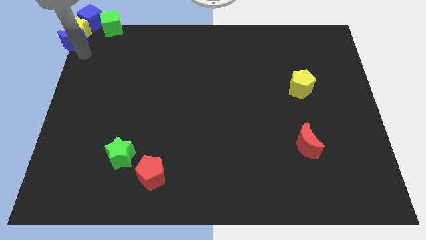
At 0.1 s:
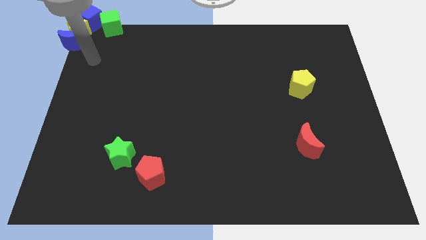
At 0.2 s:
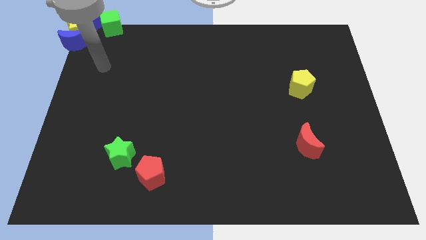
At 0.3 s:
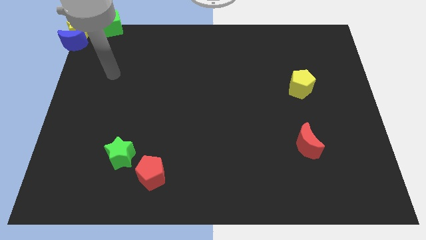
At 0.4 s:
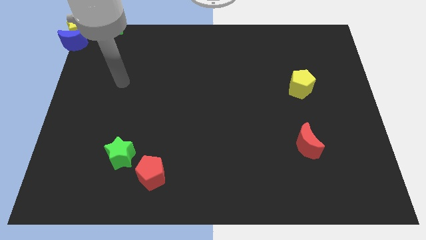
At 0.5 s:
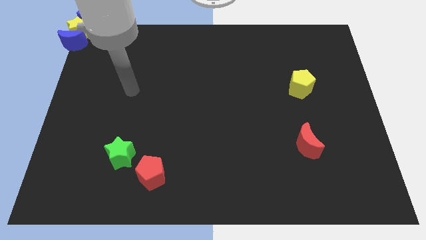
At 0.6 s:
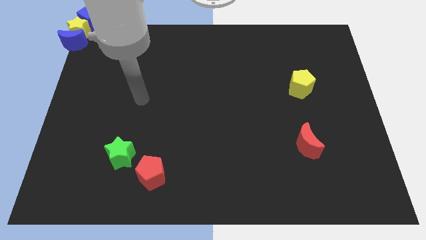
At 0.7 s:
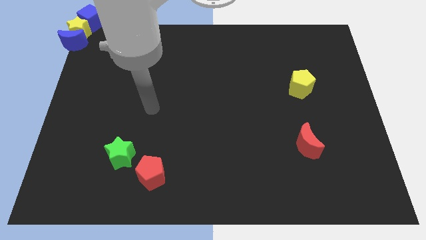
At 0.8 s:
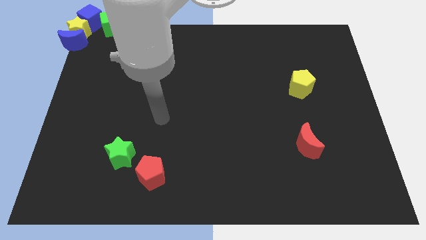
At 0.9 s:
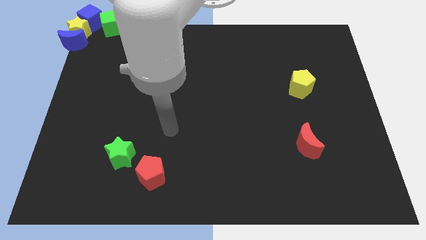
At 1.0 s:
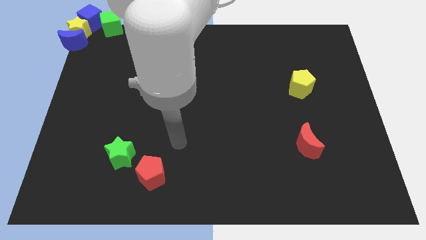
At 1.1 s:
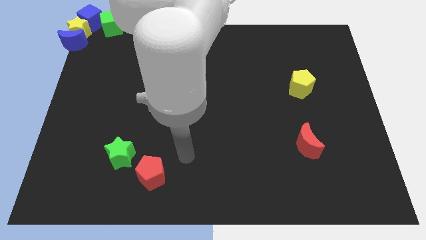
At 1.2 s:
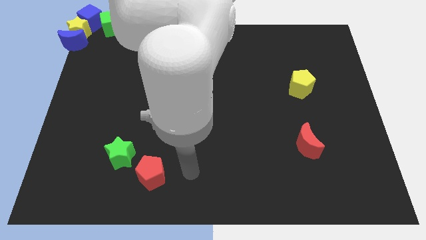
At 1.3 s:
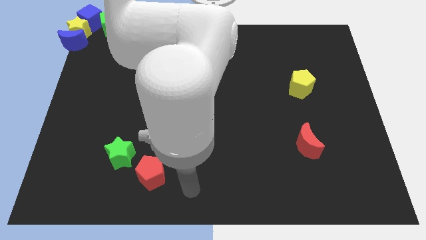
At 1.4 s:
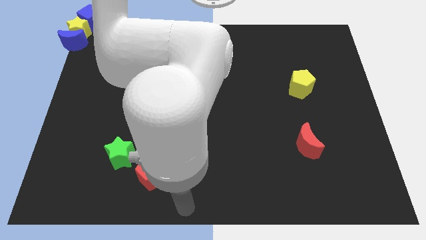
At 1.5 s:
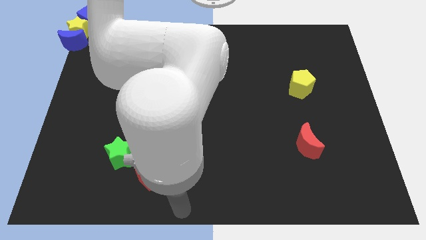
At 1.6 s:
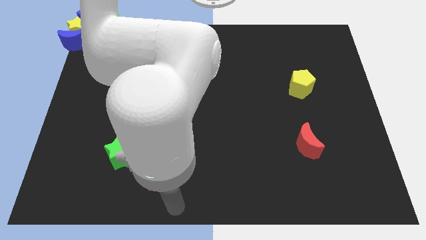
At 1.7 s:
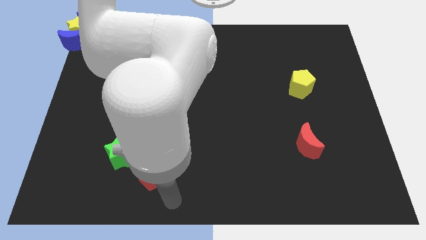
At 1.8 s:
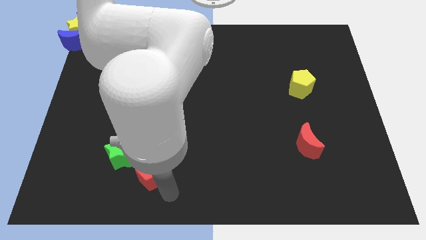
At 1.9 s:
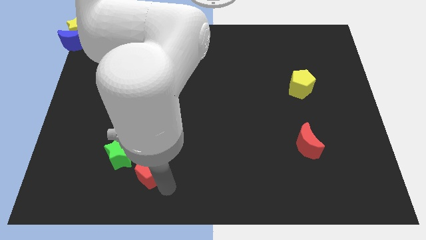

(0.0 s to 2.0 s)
point your arm below red penatgon

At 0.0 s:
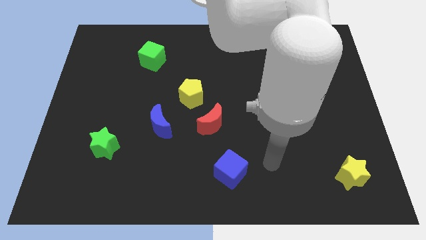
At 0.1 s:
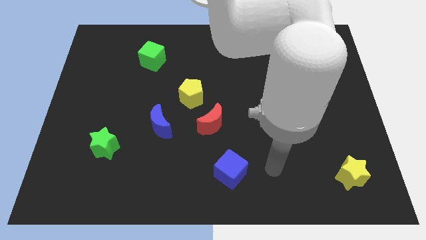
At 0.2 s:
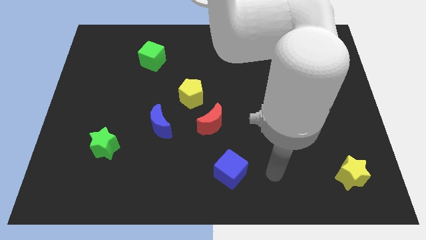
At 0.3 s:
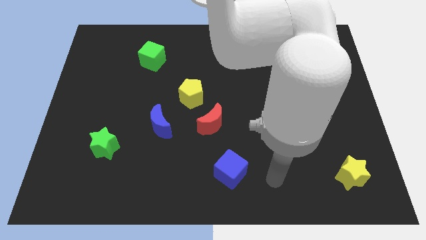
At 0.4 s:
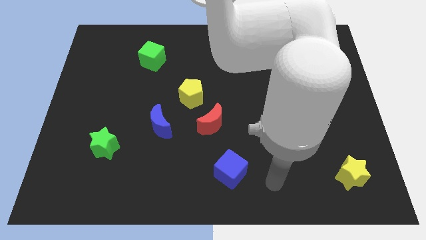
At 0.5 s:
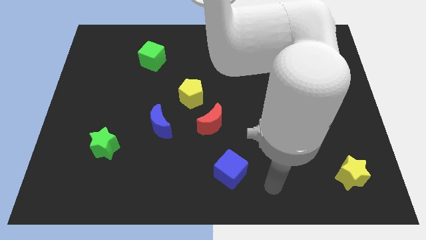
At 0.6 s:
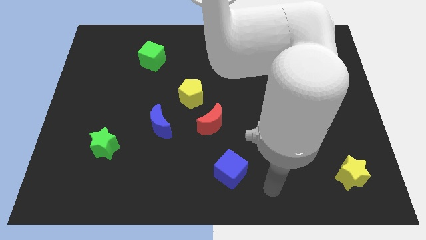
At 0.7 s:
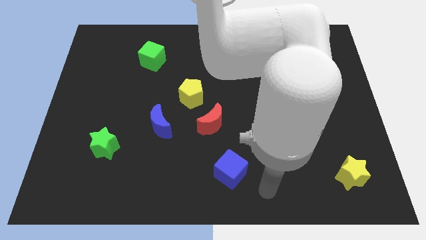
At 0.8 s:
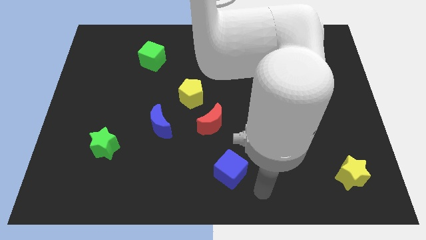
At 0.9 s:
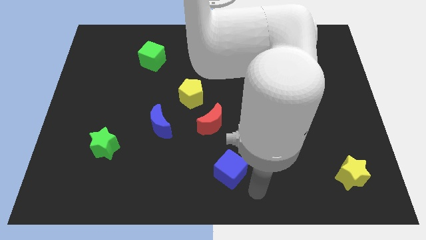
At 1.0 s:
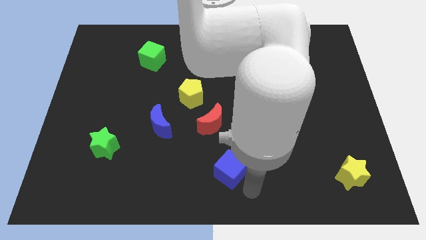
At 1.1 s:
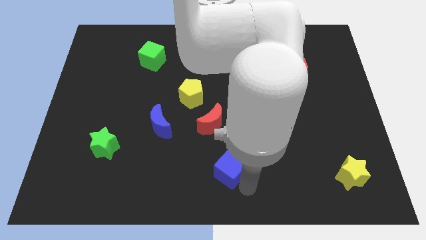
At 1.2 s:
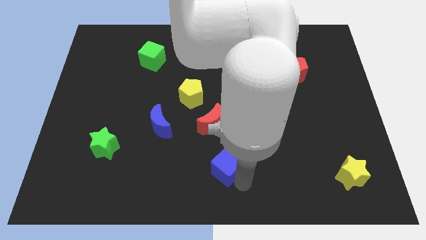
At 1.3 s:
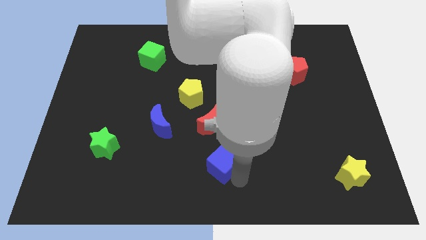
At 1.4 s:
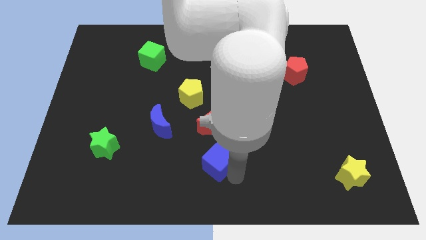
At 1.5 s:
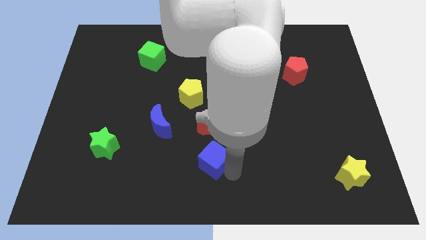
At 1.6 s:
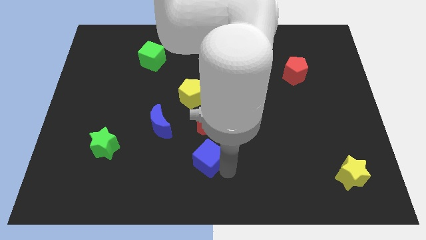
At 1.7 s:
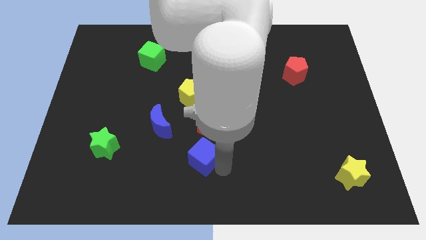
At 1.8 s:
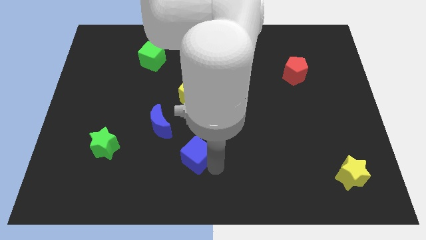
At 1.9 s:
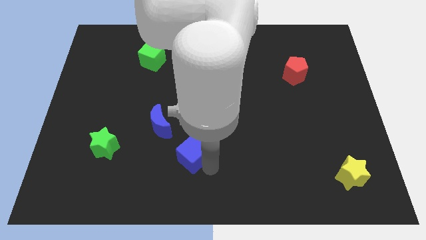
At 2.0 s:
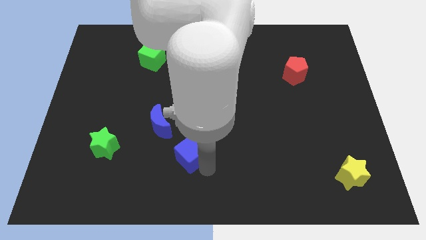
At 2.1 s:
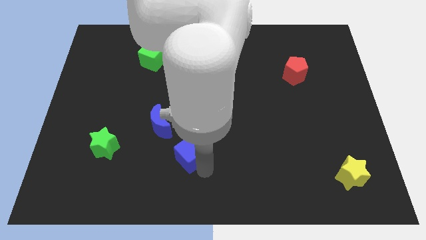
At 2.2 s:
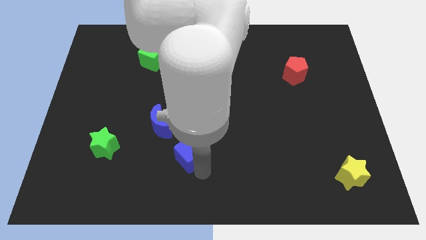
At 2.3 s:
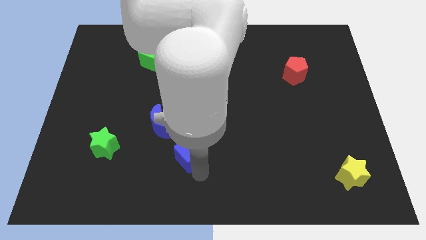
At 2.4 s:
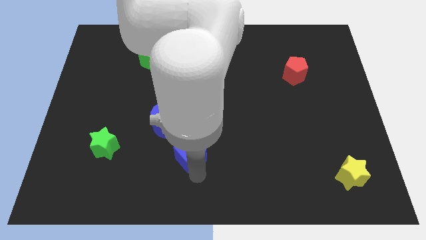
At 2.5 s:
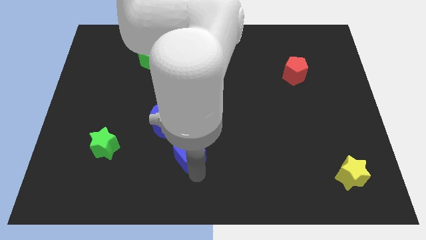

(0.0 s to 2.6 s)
place the blue cube diagonal to the blue moon

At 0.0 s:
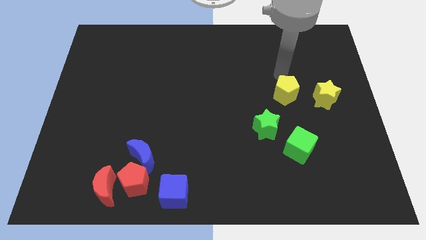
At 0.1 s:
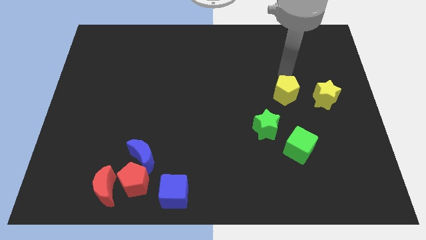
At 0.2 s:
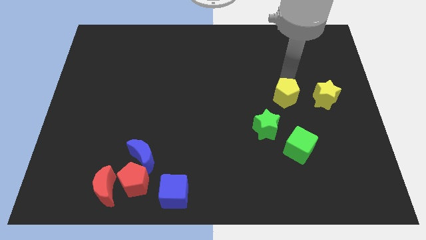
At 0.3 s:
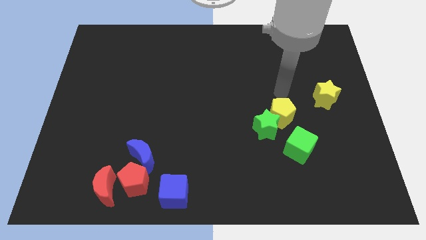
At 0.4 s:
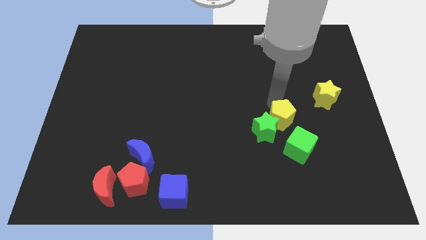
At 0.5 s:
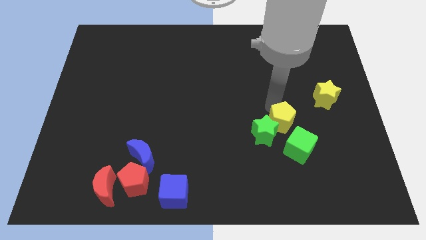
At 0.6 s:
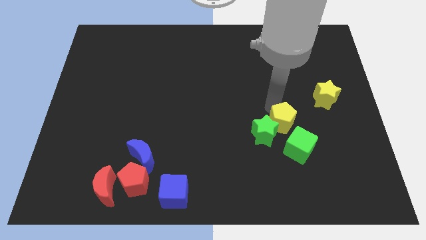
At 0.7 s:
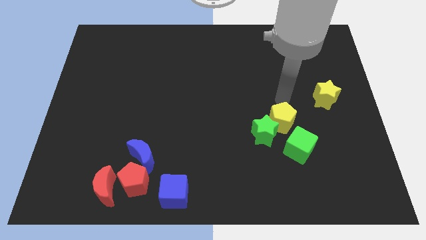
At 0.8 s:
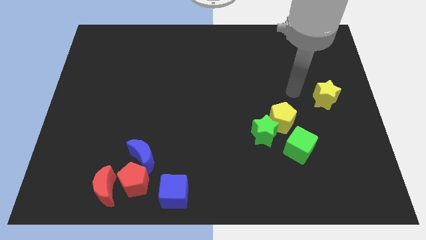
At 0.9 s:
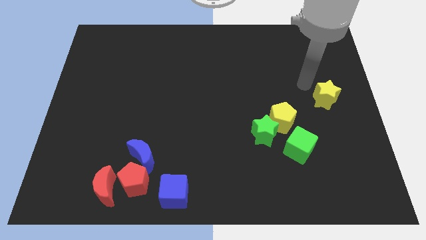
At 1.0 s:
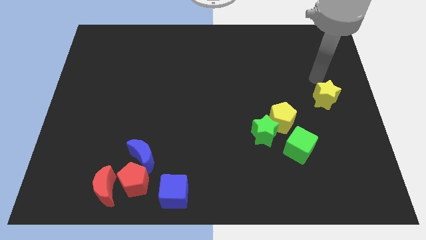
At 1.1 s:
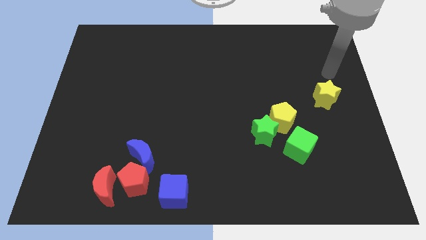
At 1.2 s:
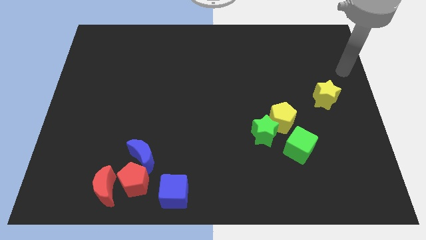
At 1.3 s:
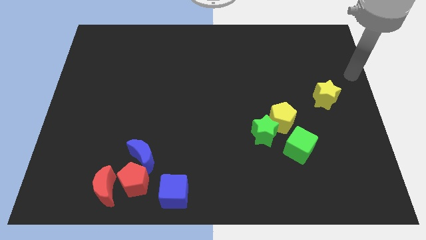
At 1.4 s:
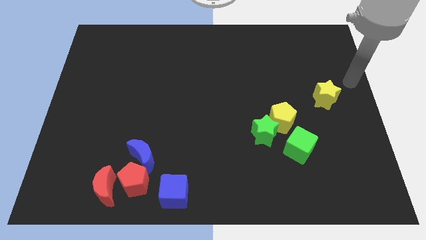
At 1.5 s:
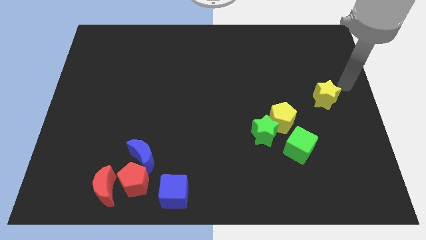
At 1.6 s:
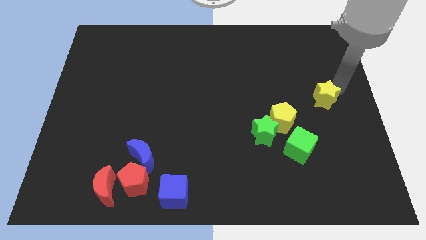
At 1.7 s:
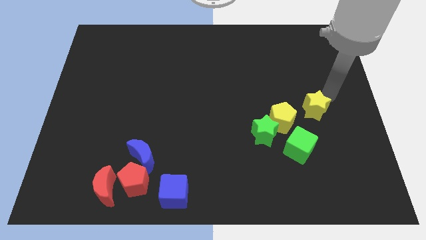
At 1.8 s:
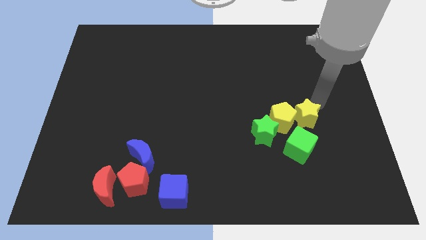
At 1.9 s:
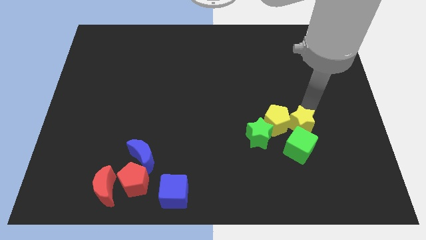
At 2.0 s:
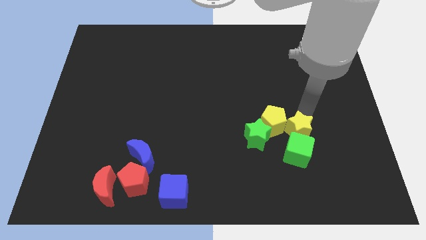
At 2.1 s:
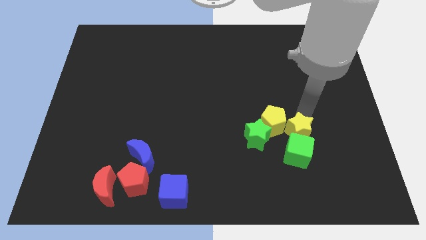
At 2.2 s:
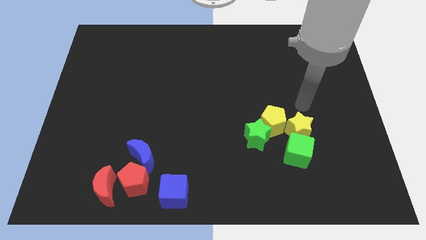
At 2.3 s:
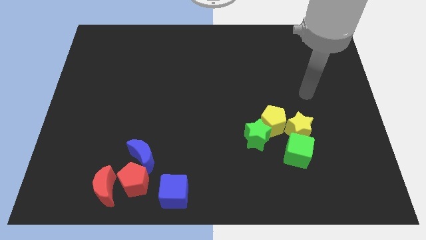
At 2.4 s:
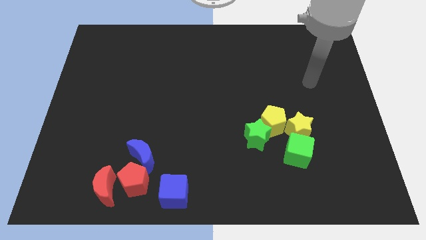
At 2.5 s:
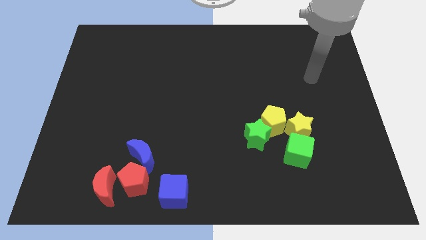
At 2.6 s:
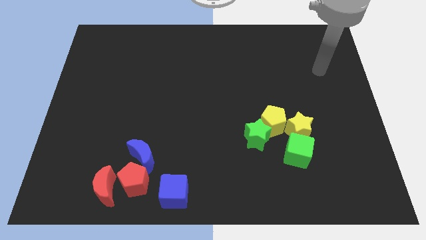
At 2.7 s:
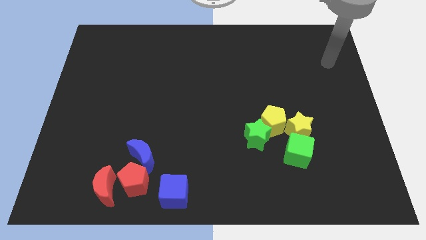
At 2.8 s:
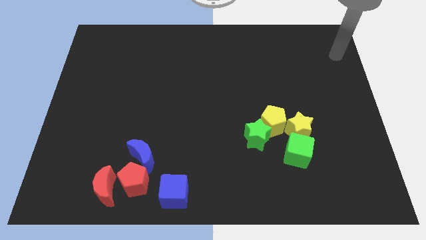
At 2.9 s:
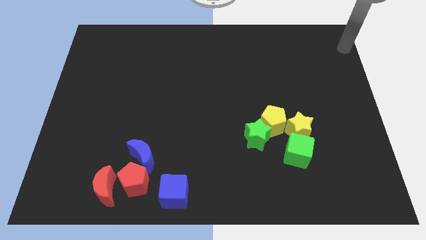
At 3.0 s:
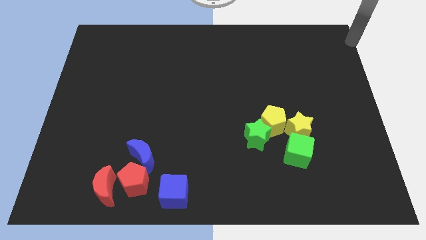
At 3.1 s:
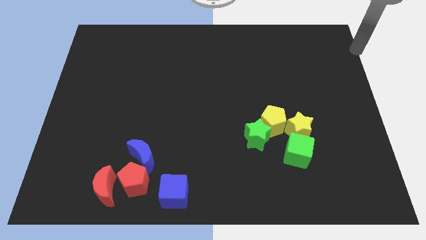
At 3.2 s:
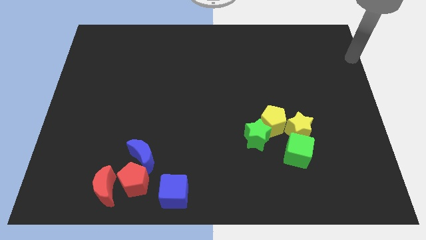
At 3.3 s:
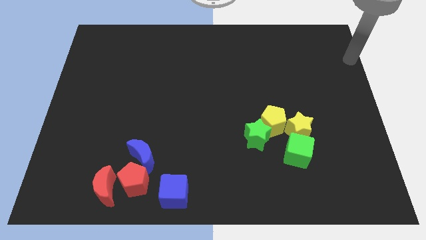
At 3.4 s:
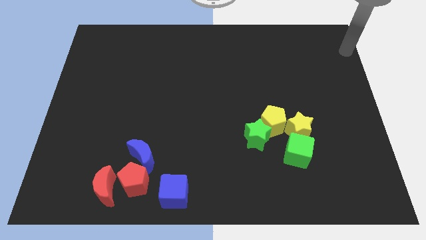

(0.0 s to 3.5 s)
add both the yellow blocks into the both green blocks to form a group of green and yellow blocks

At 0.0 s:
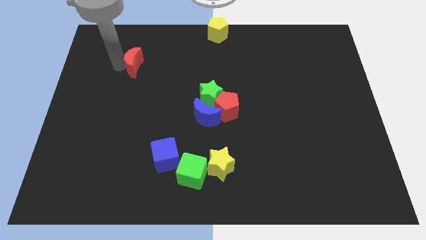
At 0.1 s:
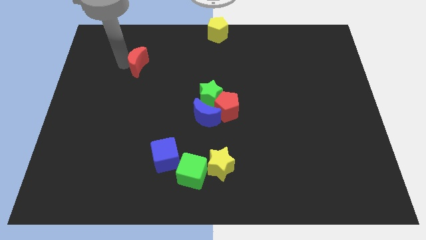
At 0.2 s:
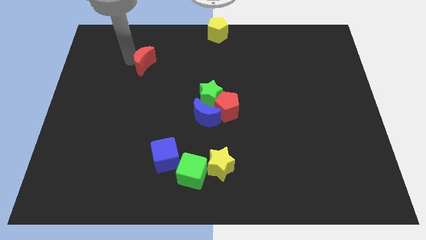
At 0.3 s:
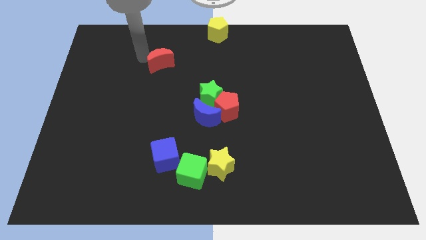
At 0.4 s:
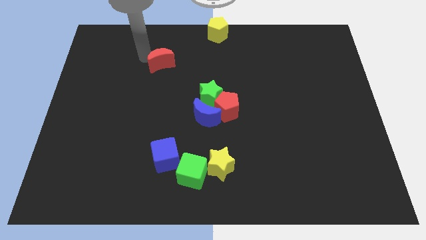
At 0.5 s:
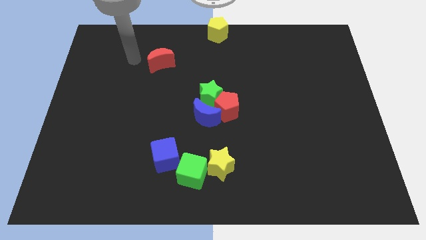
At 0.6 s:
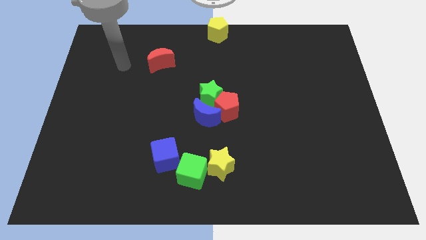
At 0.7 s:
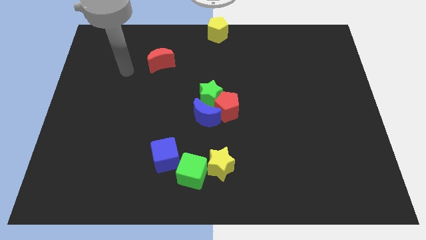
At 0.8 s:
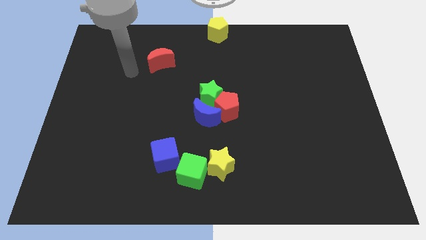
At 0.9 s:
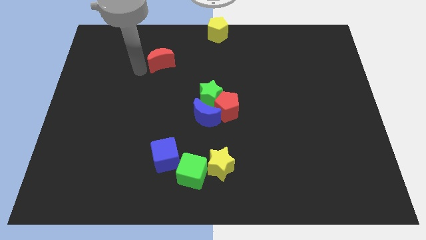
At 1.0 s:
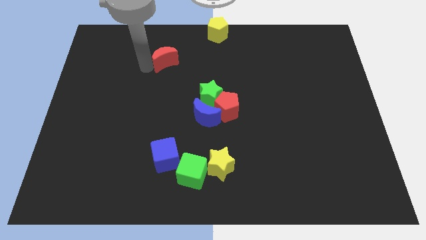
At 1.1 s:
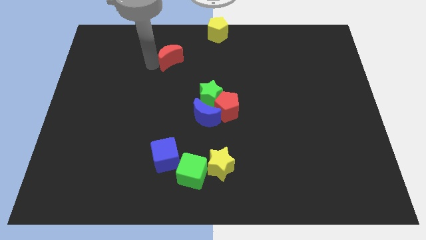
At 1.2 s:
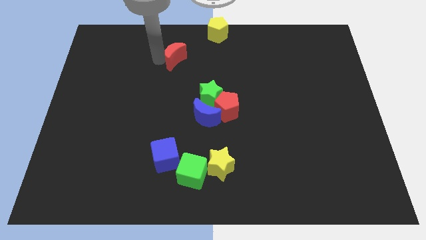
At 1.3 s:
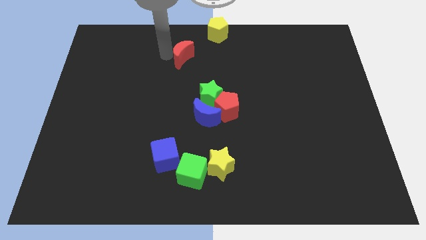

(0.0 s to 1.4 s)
push the red moon to the right
